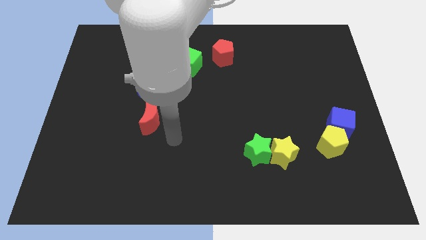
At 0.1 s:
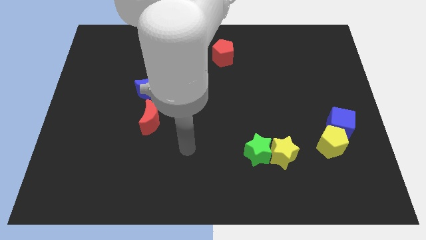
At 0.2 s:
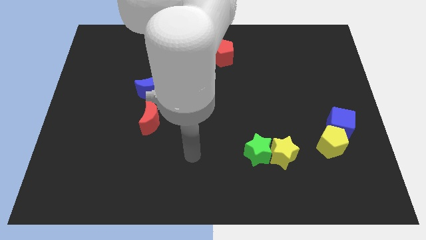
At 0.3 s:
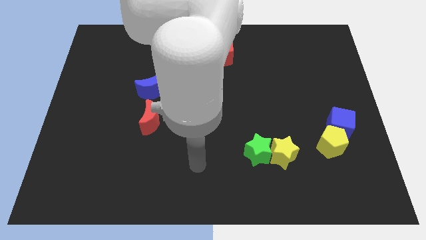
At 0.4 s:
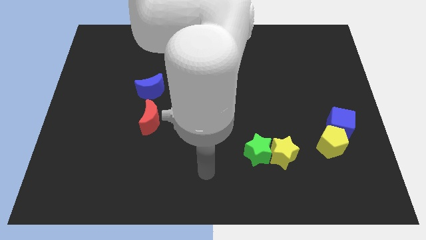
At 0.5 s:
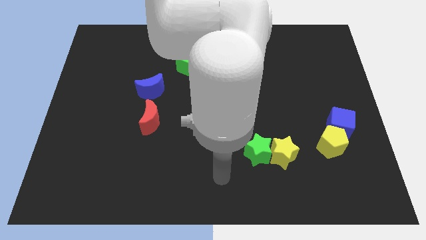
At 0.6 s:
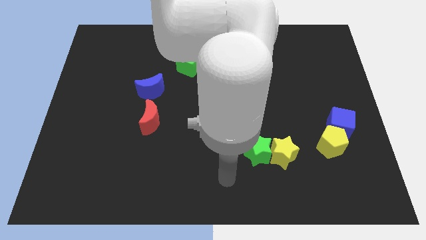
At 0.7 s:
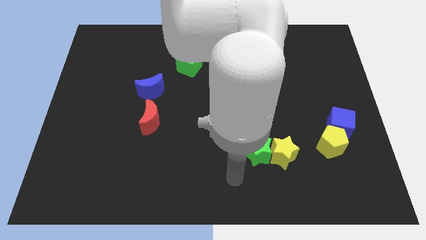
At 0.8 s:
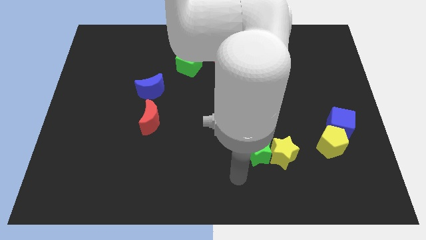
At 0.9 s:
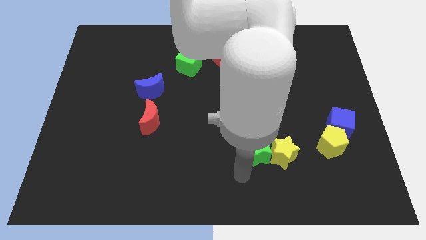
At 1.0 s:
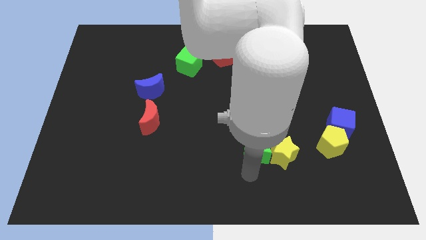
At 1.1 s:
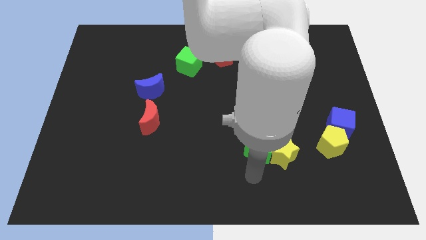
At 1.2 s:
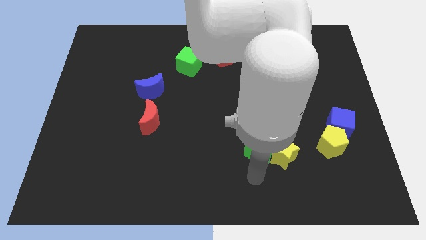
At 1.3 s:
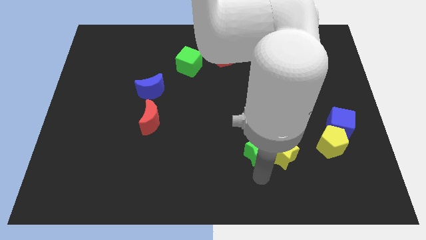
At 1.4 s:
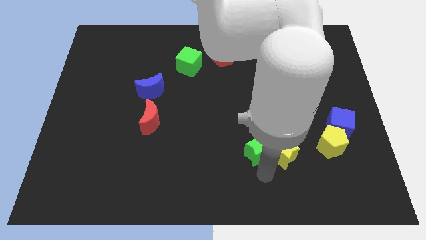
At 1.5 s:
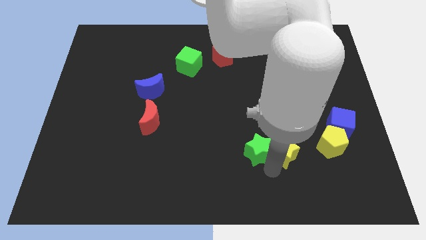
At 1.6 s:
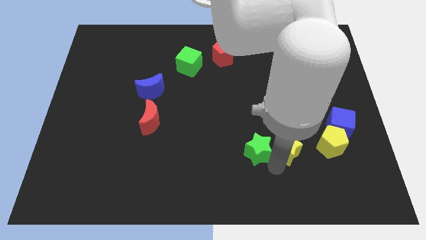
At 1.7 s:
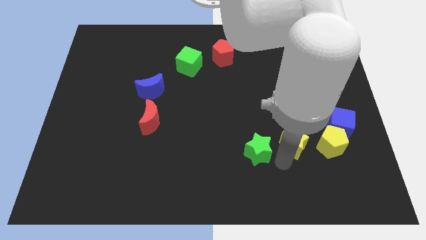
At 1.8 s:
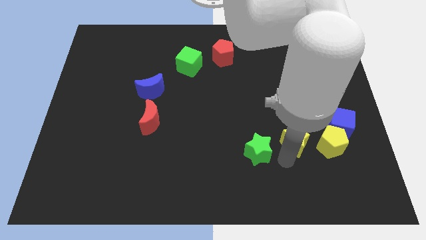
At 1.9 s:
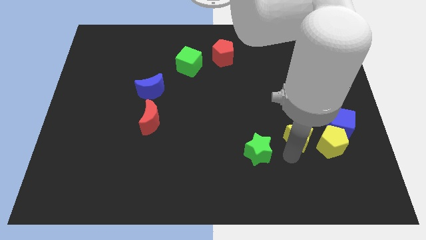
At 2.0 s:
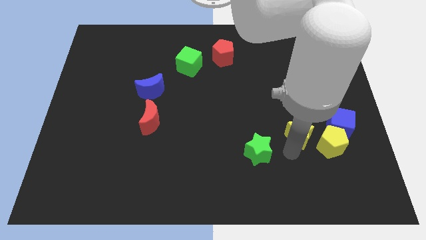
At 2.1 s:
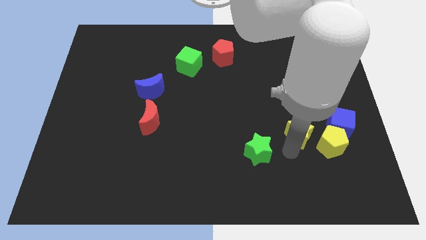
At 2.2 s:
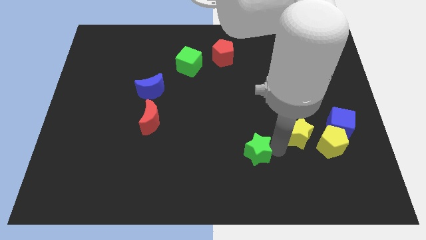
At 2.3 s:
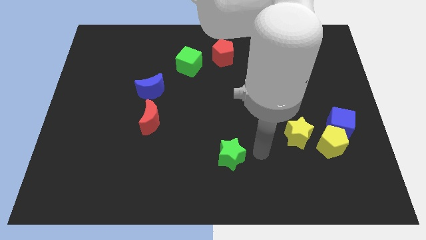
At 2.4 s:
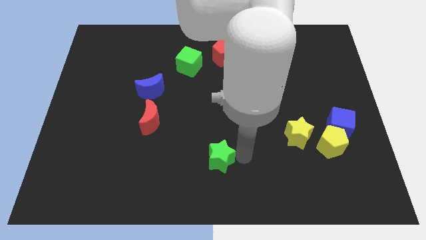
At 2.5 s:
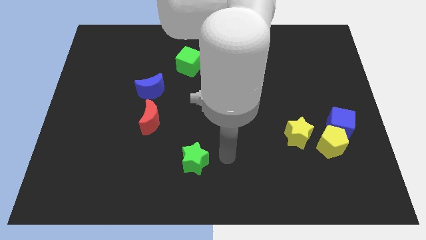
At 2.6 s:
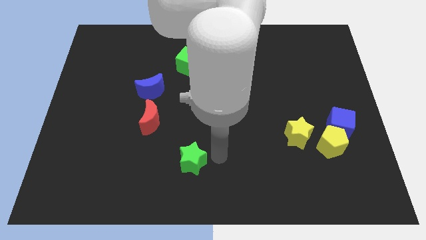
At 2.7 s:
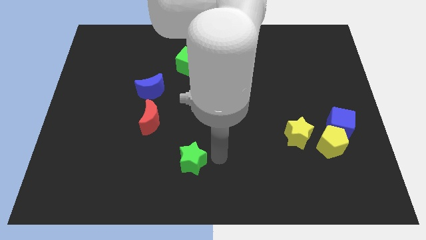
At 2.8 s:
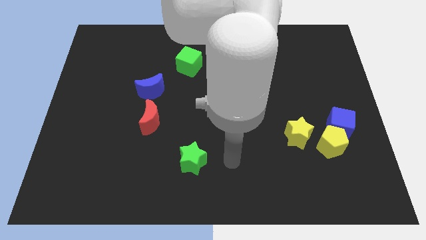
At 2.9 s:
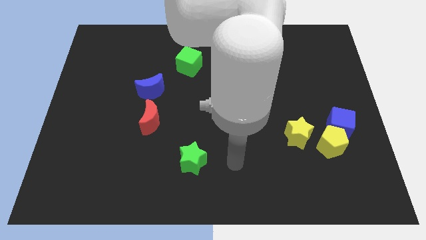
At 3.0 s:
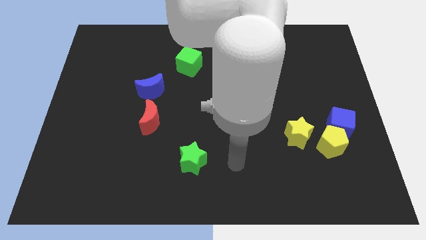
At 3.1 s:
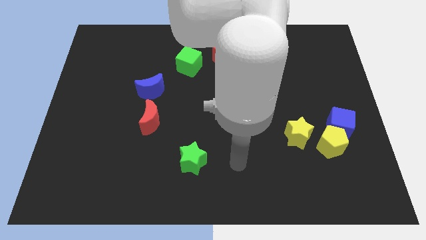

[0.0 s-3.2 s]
separate the green and yellow stars

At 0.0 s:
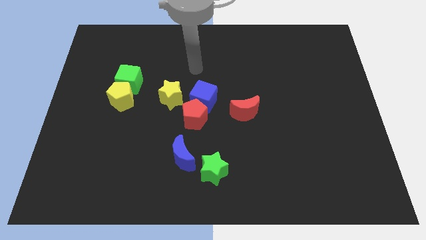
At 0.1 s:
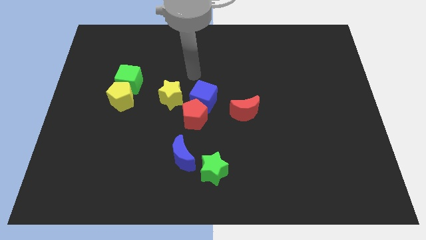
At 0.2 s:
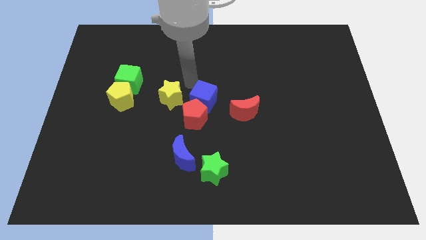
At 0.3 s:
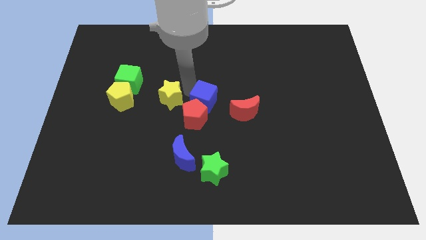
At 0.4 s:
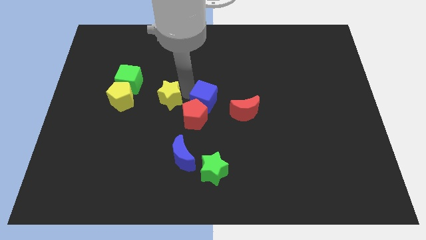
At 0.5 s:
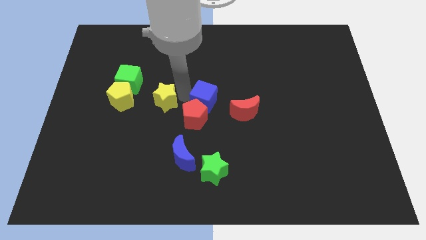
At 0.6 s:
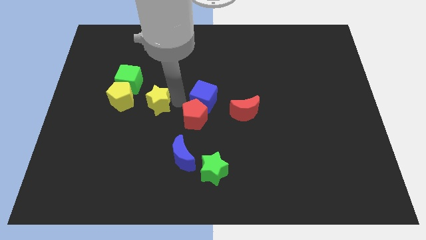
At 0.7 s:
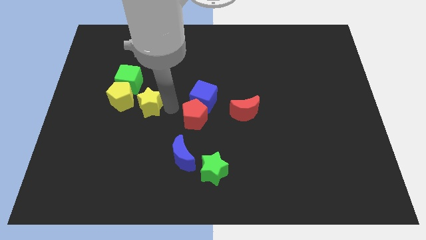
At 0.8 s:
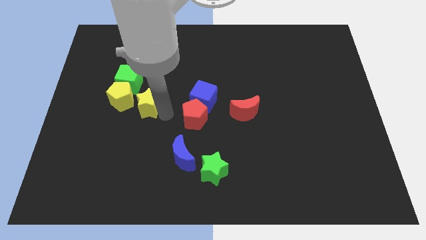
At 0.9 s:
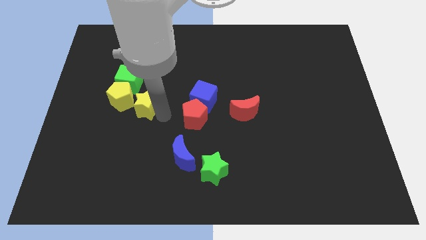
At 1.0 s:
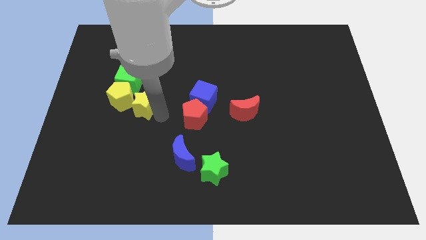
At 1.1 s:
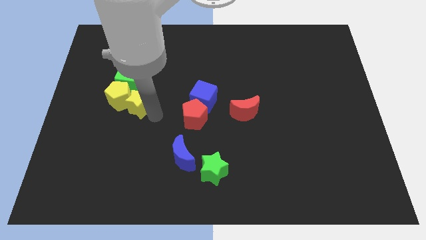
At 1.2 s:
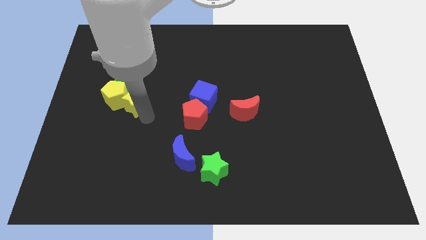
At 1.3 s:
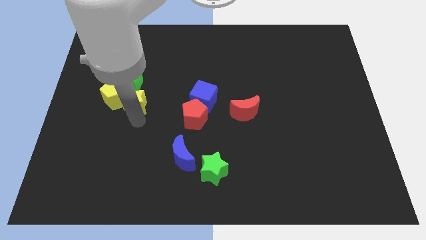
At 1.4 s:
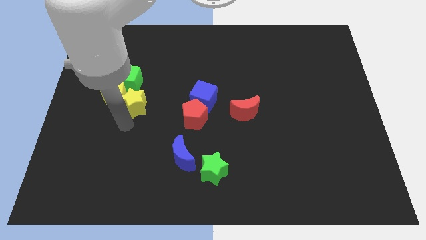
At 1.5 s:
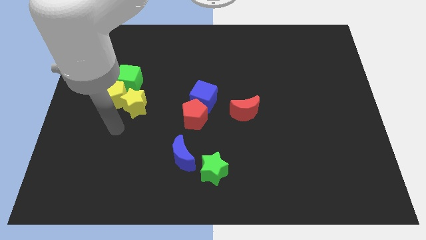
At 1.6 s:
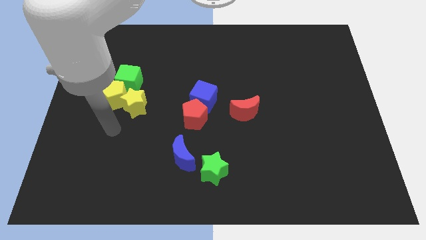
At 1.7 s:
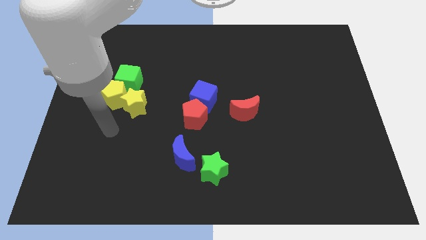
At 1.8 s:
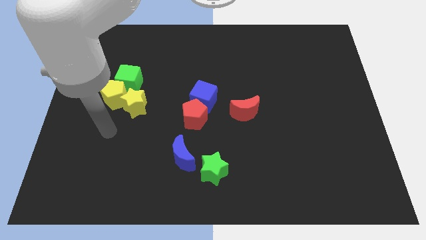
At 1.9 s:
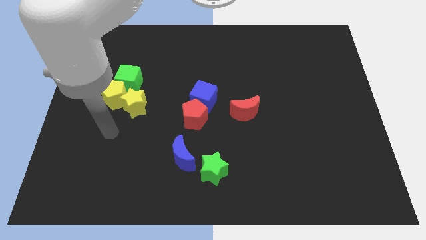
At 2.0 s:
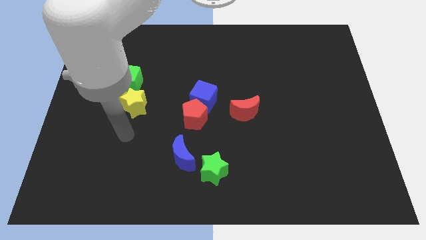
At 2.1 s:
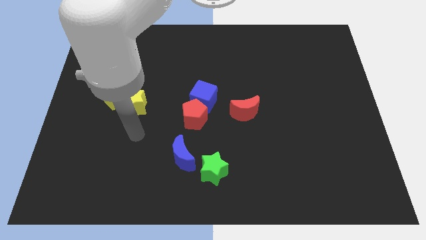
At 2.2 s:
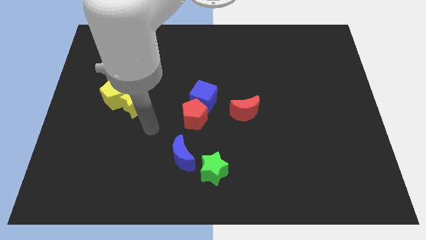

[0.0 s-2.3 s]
push the yellow star into the yellow pentagon

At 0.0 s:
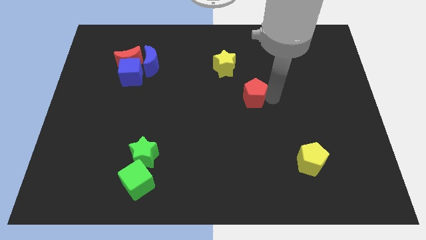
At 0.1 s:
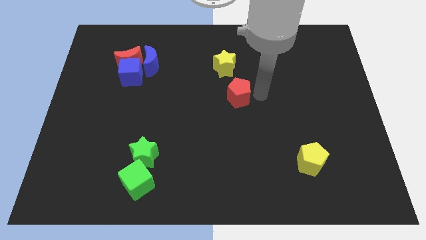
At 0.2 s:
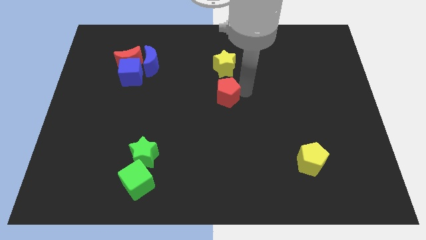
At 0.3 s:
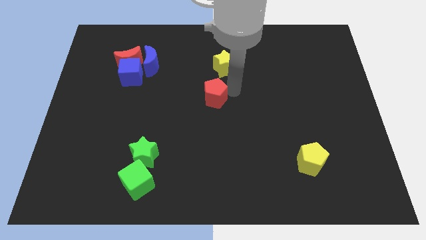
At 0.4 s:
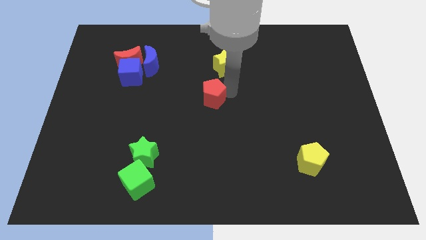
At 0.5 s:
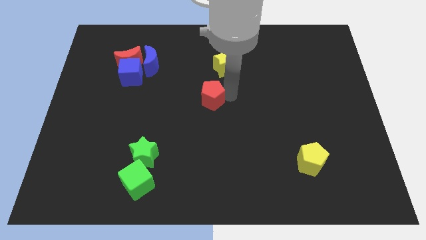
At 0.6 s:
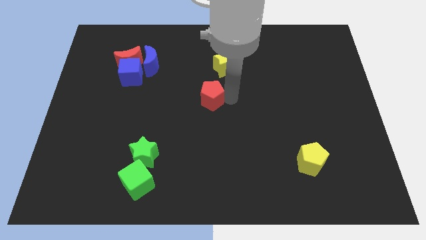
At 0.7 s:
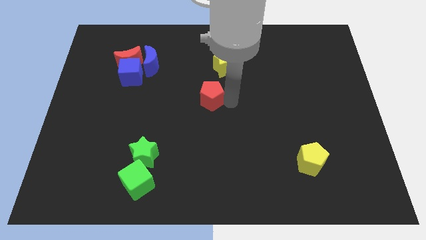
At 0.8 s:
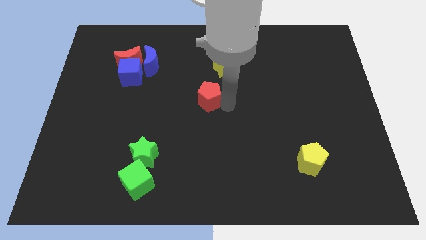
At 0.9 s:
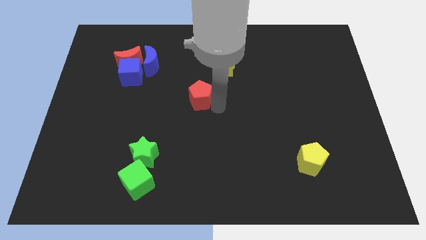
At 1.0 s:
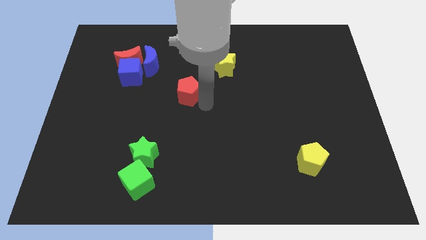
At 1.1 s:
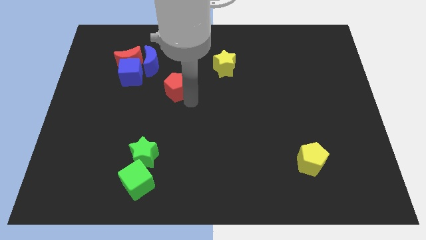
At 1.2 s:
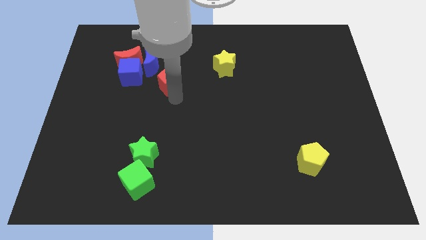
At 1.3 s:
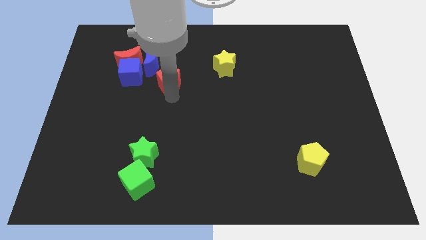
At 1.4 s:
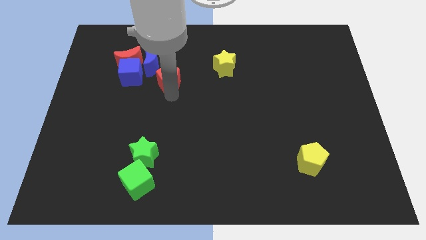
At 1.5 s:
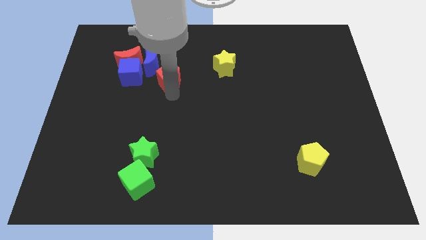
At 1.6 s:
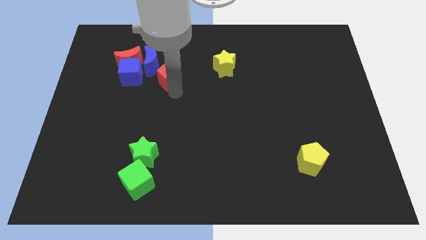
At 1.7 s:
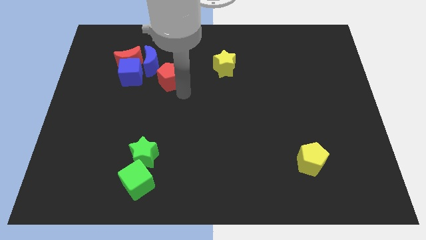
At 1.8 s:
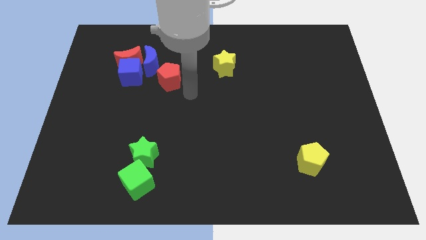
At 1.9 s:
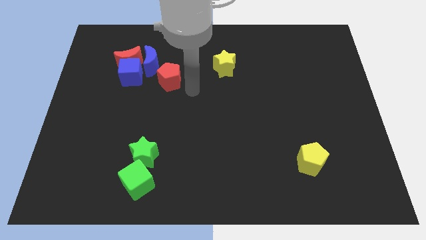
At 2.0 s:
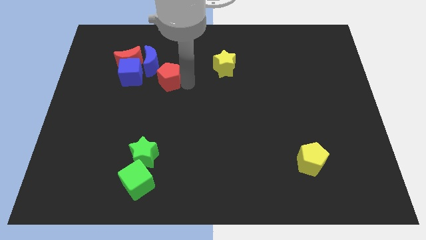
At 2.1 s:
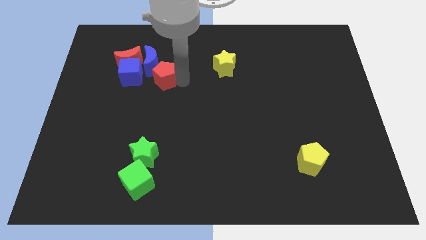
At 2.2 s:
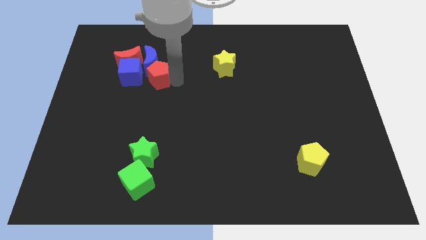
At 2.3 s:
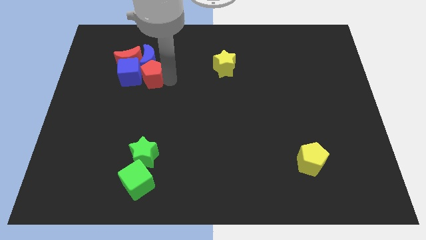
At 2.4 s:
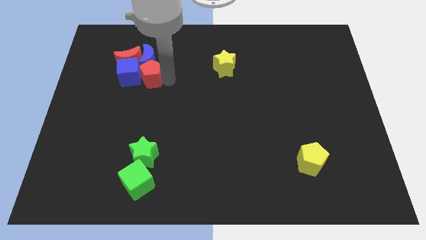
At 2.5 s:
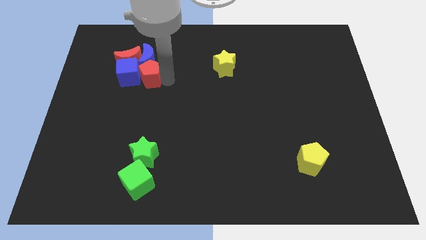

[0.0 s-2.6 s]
push the red pentagon into the group of blocks

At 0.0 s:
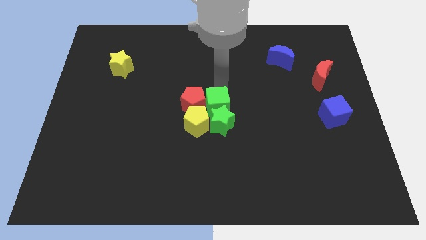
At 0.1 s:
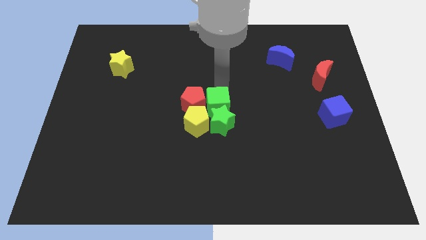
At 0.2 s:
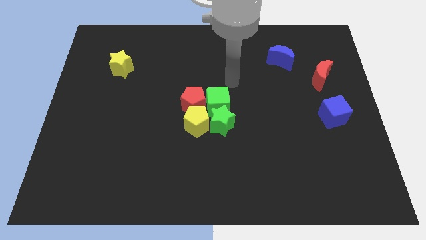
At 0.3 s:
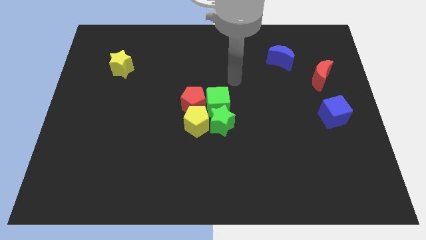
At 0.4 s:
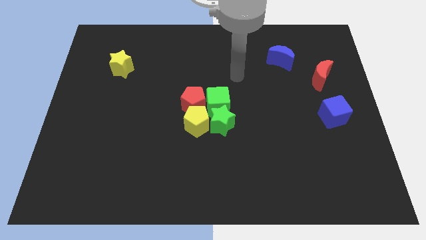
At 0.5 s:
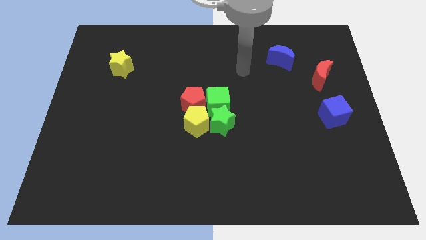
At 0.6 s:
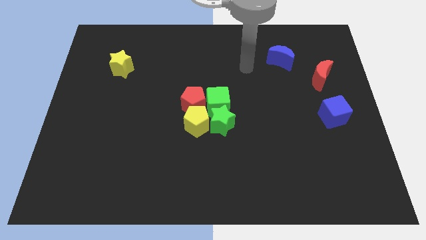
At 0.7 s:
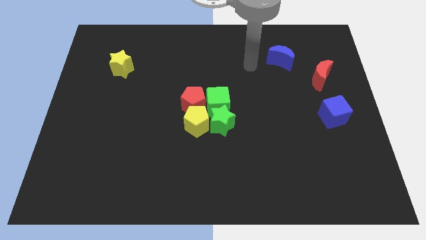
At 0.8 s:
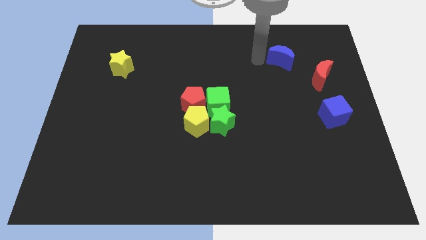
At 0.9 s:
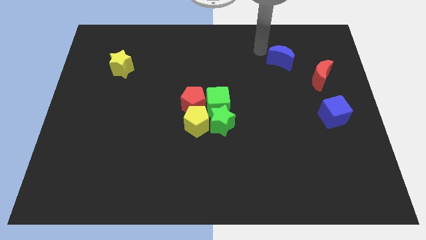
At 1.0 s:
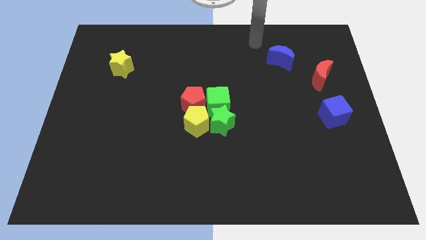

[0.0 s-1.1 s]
move the arm away from the green cube
